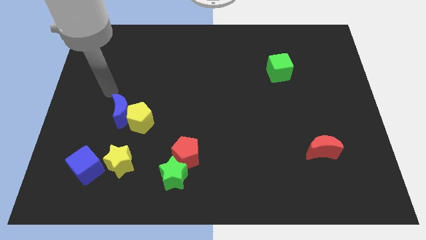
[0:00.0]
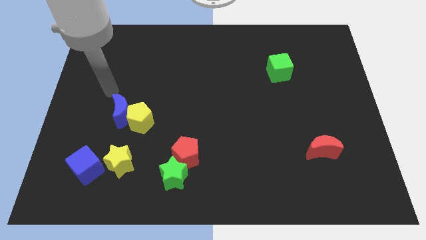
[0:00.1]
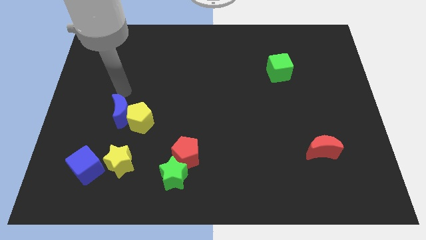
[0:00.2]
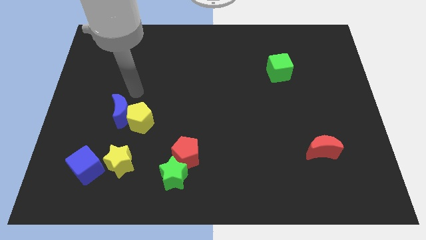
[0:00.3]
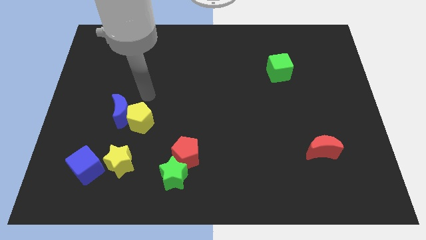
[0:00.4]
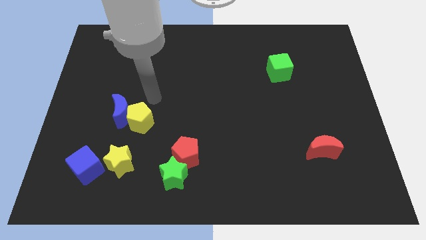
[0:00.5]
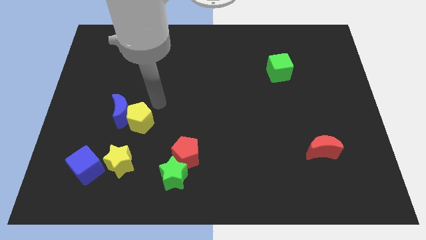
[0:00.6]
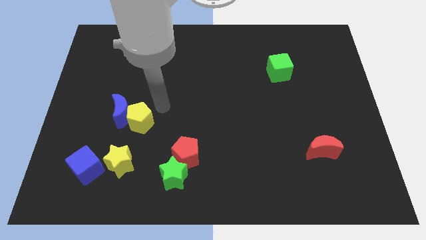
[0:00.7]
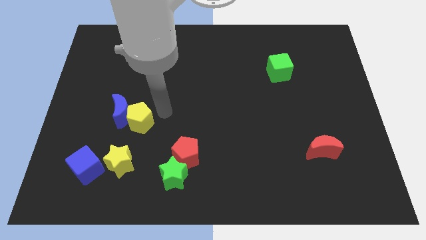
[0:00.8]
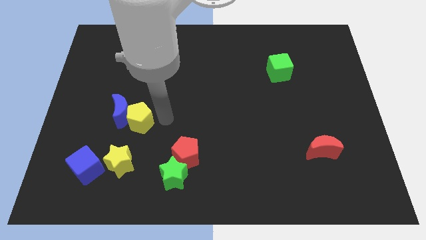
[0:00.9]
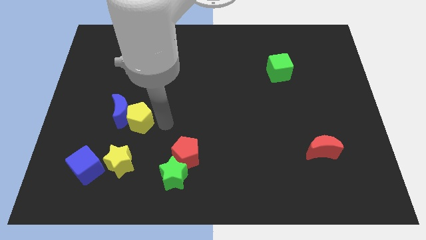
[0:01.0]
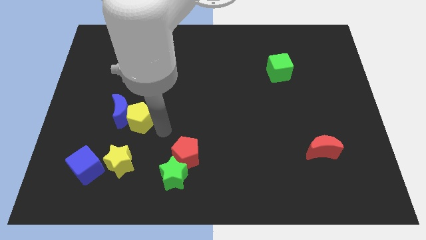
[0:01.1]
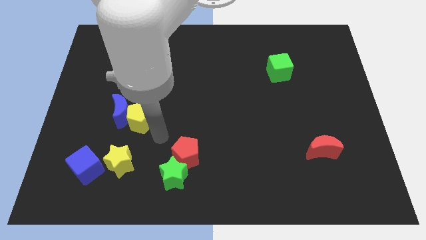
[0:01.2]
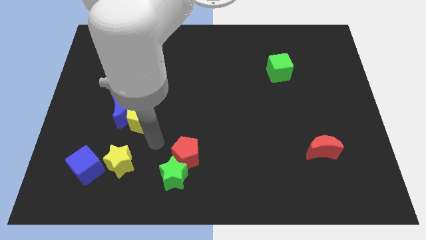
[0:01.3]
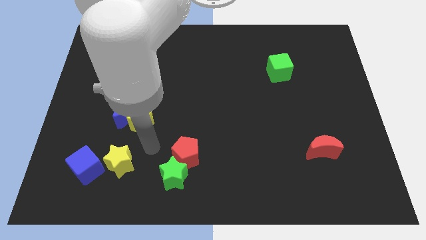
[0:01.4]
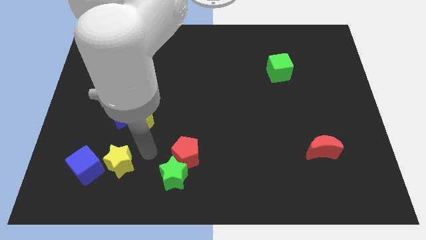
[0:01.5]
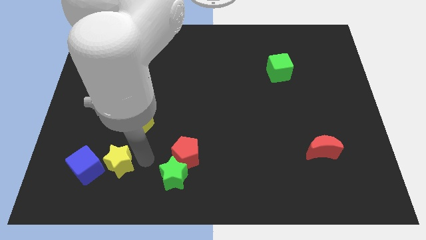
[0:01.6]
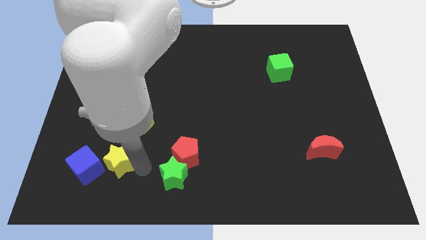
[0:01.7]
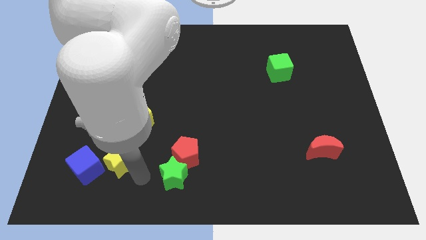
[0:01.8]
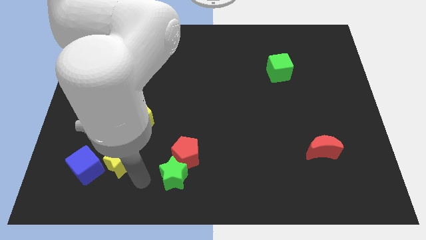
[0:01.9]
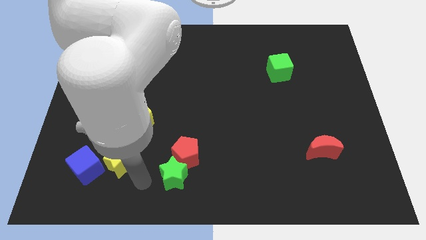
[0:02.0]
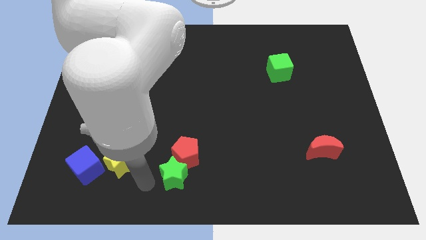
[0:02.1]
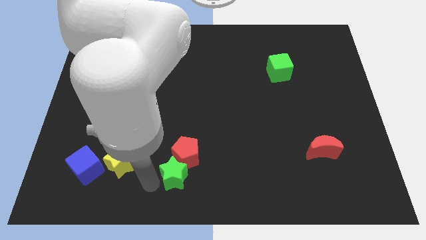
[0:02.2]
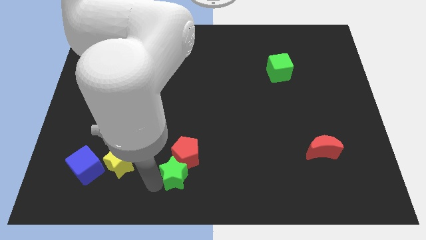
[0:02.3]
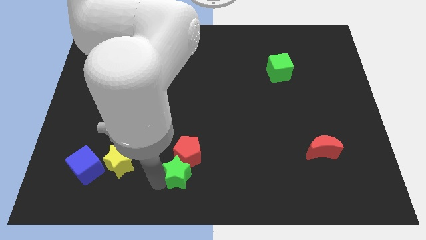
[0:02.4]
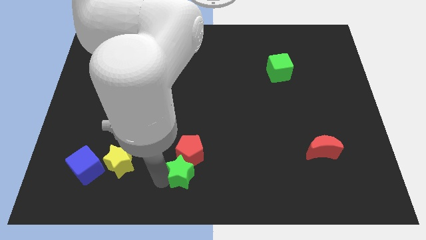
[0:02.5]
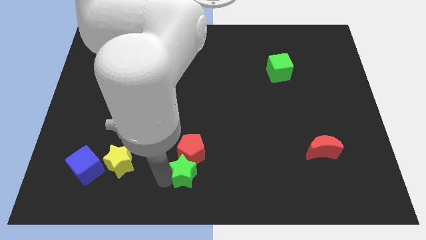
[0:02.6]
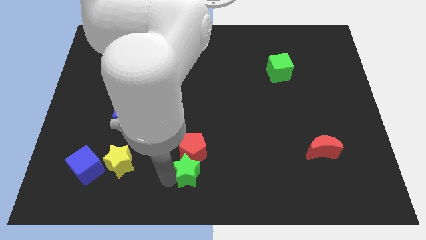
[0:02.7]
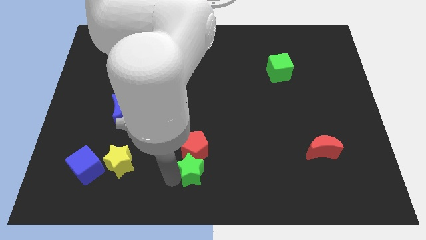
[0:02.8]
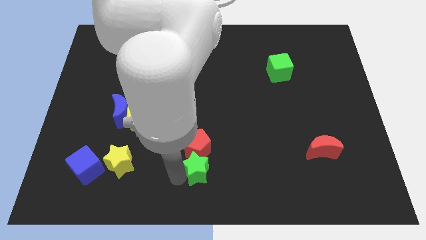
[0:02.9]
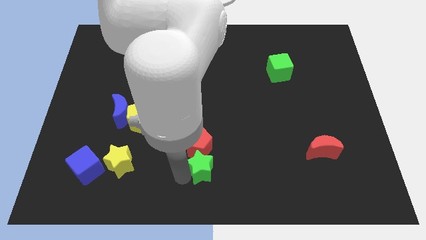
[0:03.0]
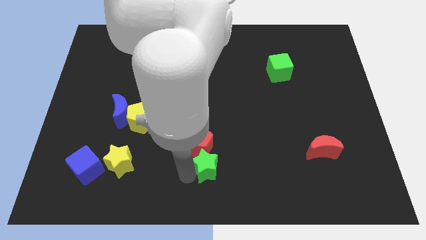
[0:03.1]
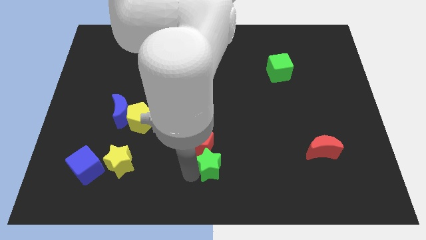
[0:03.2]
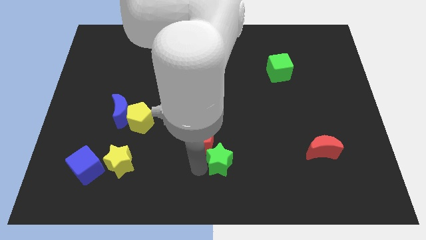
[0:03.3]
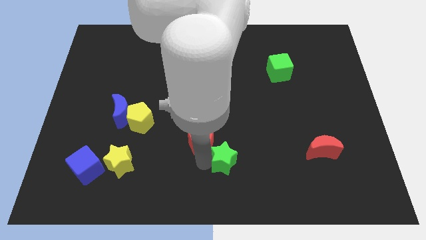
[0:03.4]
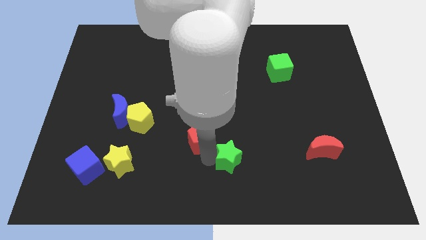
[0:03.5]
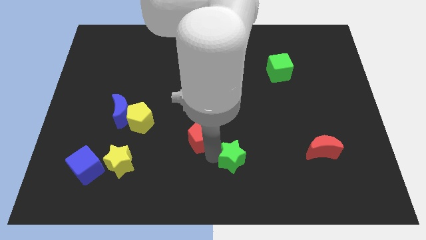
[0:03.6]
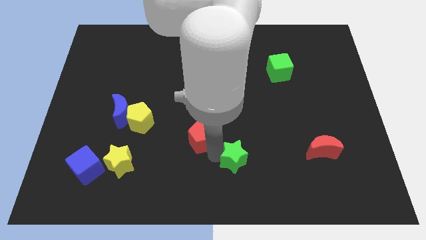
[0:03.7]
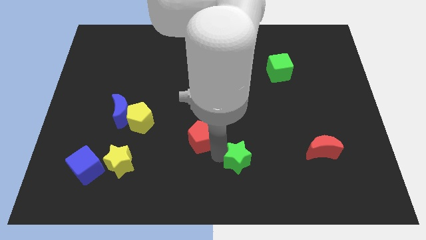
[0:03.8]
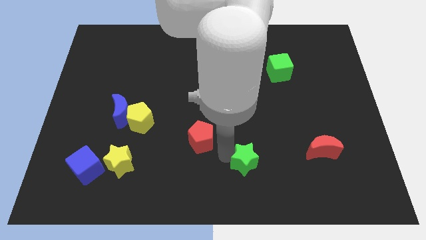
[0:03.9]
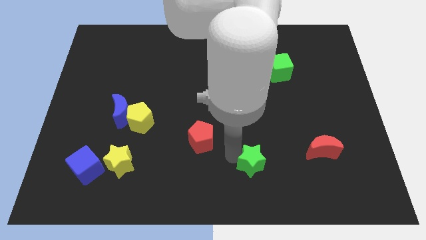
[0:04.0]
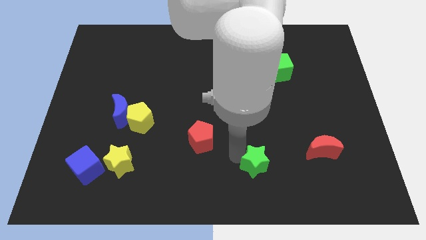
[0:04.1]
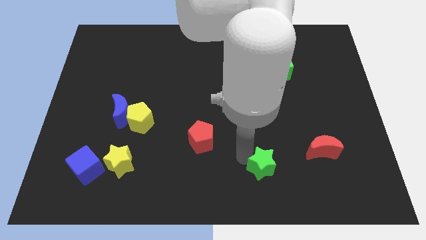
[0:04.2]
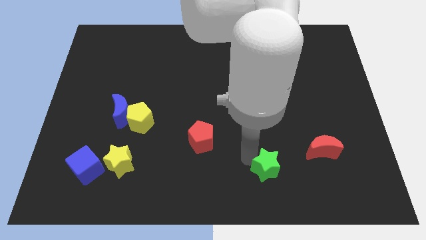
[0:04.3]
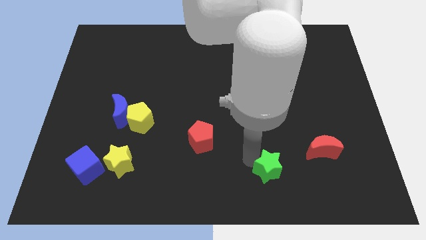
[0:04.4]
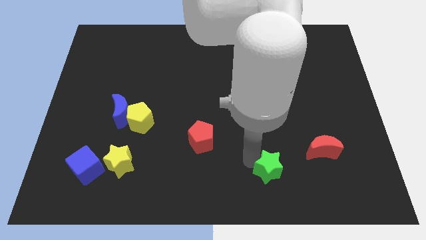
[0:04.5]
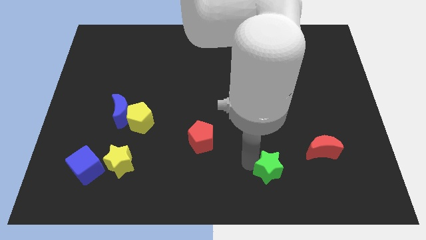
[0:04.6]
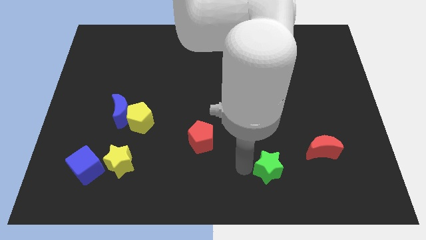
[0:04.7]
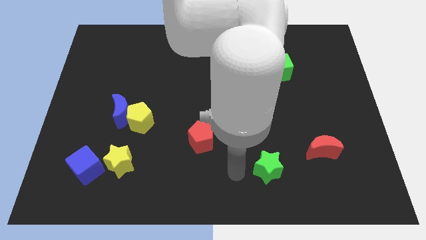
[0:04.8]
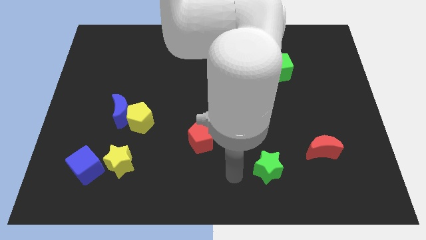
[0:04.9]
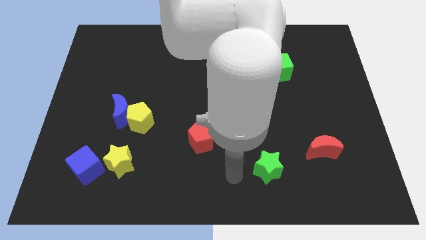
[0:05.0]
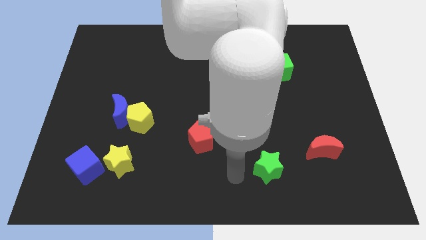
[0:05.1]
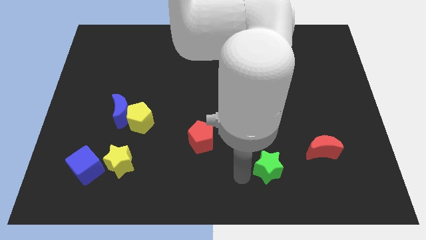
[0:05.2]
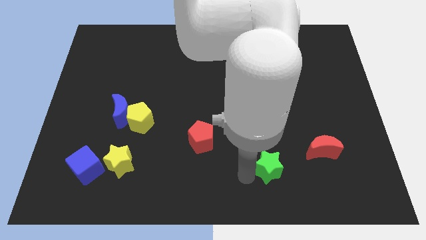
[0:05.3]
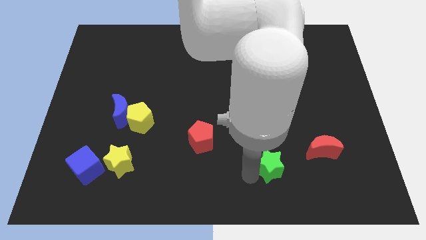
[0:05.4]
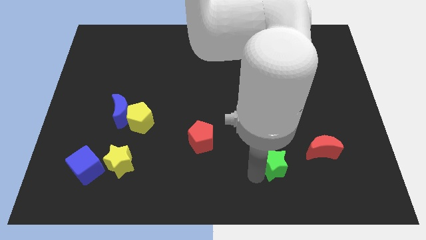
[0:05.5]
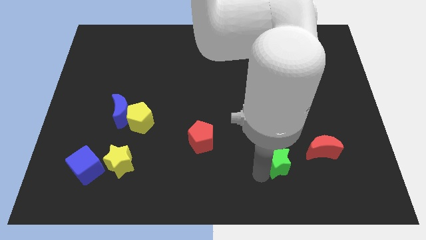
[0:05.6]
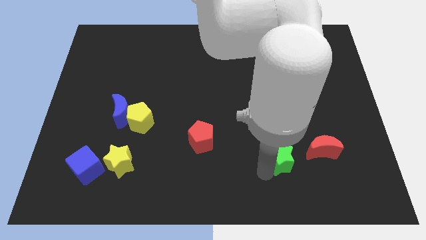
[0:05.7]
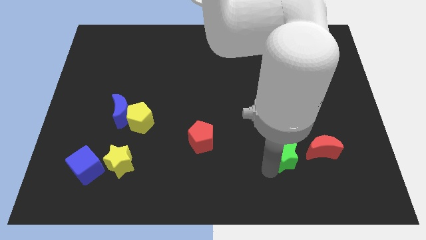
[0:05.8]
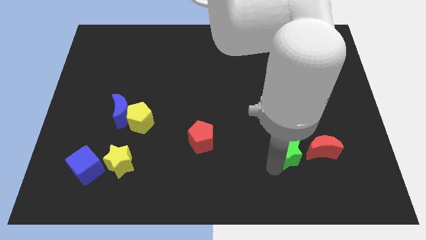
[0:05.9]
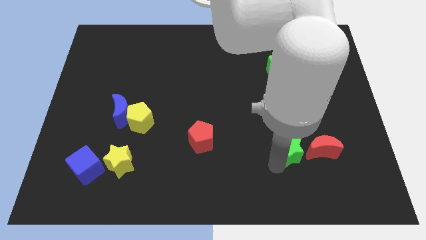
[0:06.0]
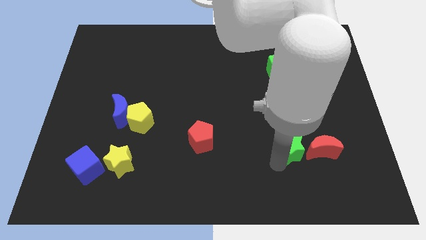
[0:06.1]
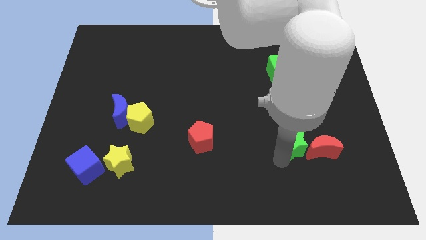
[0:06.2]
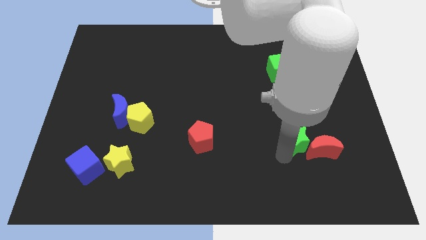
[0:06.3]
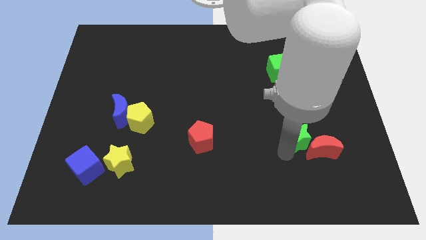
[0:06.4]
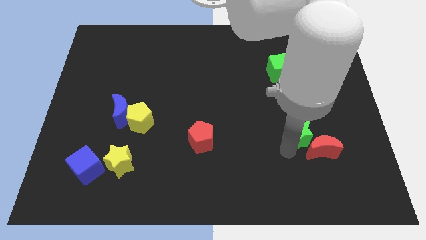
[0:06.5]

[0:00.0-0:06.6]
put the green star to the red moon

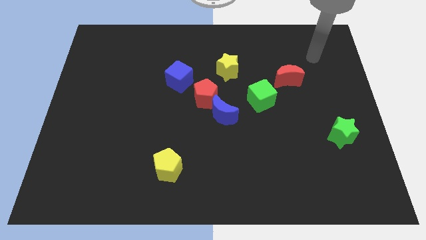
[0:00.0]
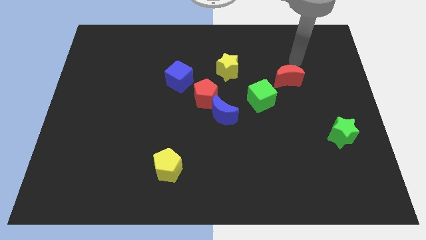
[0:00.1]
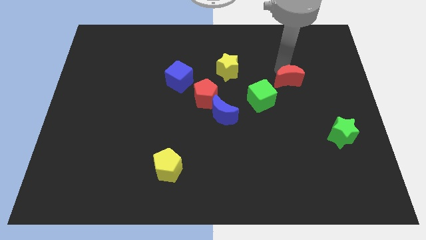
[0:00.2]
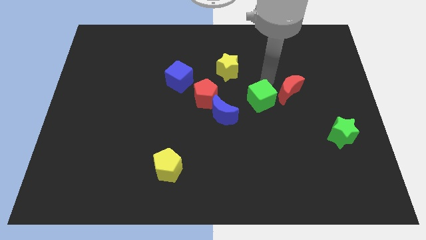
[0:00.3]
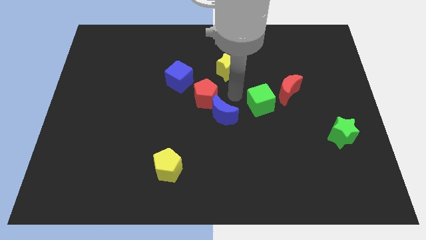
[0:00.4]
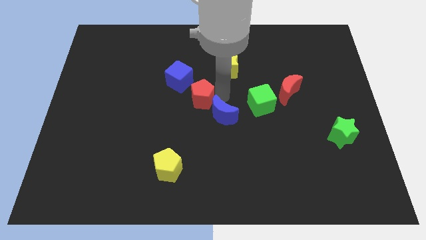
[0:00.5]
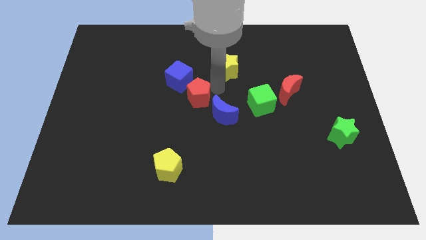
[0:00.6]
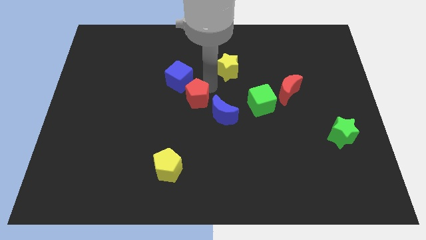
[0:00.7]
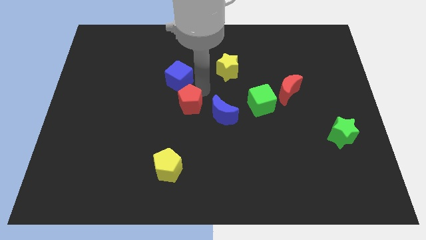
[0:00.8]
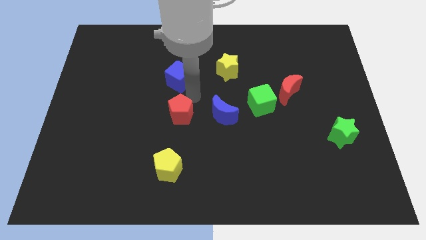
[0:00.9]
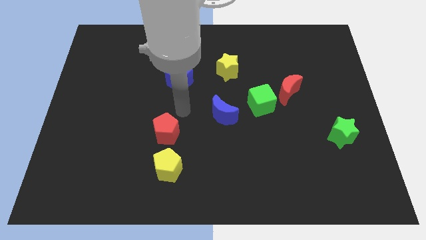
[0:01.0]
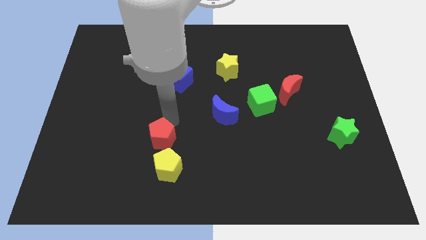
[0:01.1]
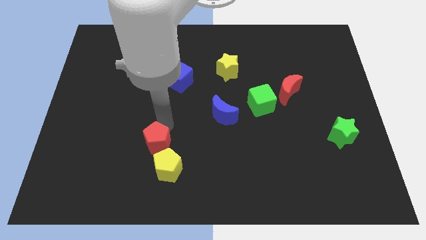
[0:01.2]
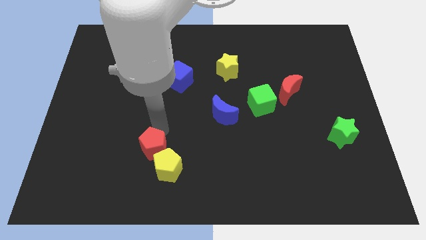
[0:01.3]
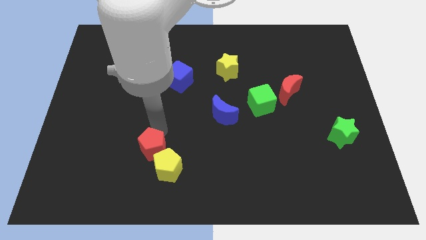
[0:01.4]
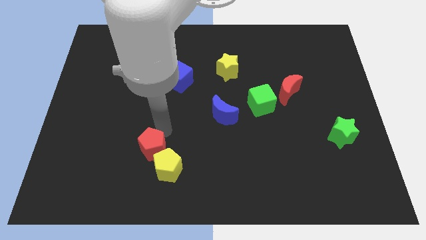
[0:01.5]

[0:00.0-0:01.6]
slide the red pentagon next to the yellow pentagon
